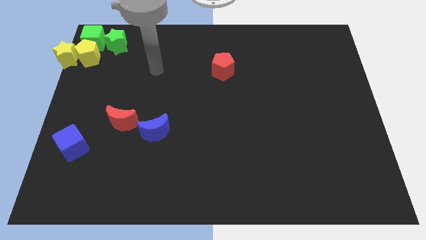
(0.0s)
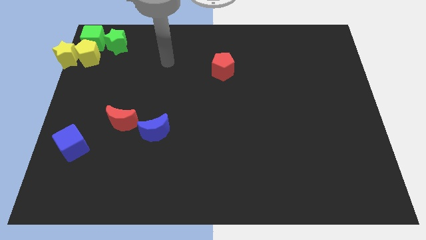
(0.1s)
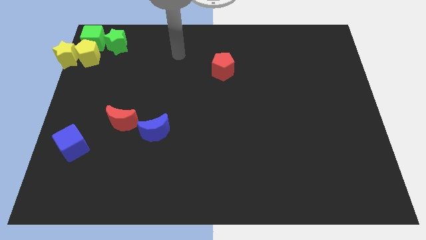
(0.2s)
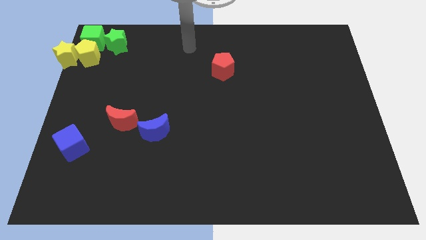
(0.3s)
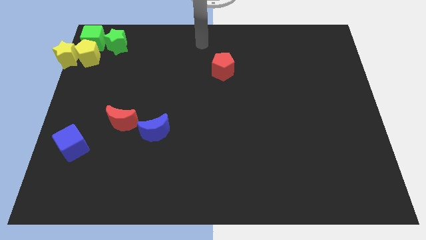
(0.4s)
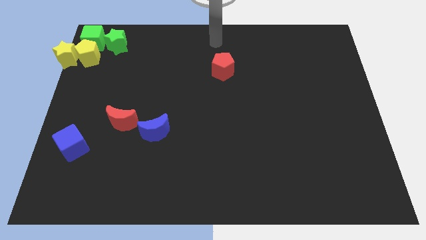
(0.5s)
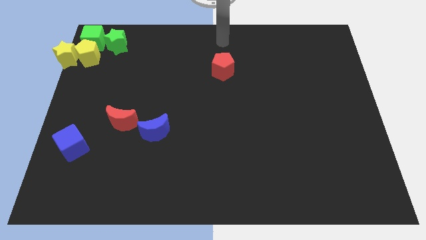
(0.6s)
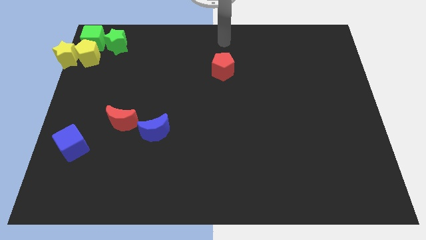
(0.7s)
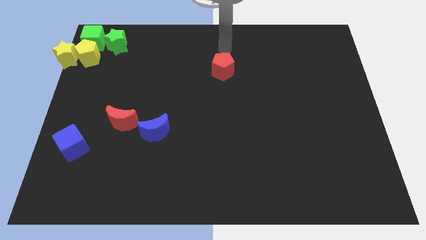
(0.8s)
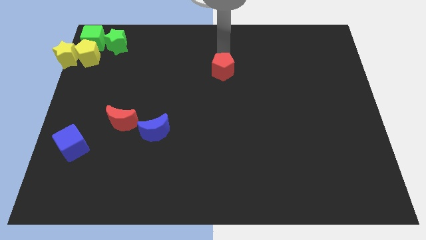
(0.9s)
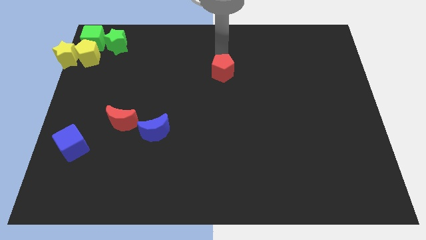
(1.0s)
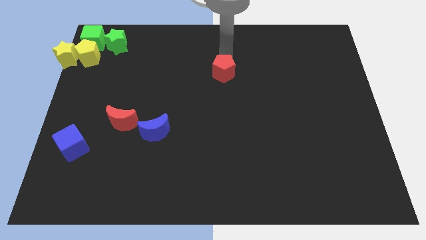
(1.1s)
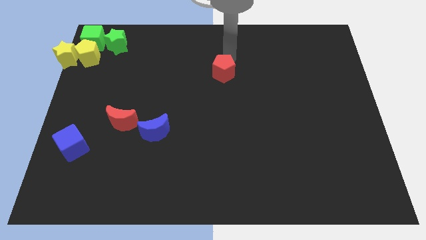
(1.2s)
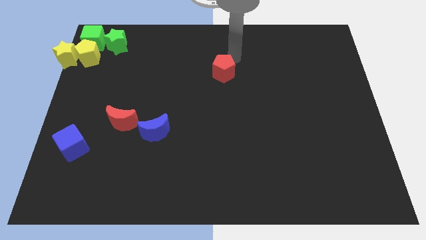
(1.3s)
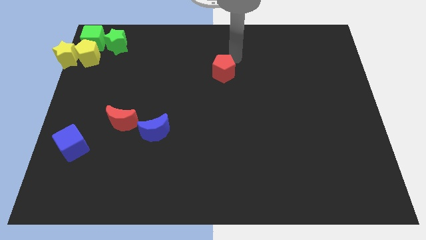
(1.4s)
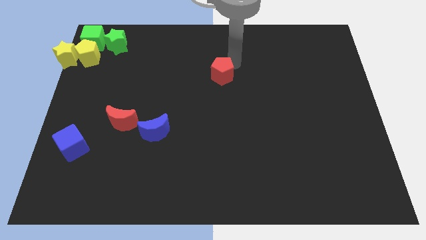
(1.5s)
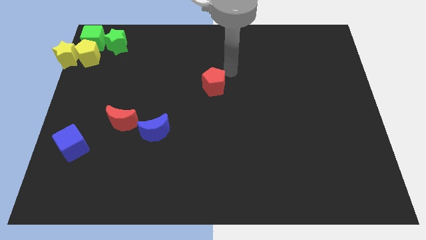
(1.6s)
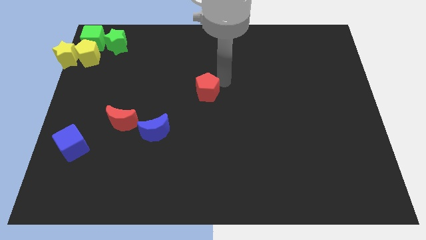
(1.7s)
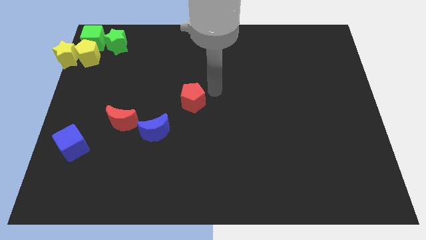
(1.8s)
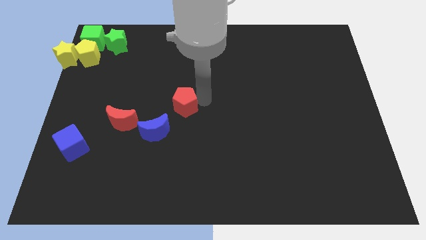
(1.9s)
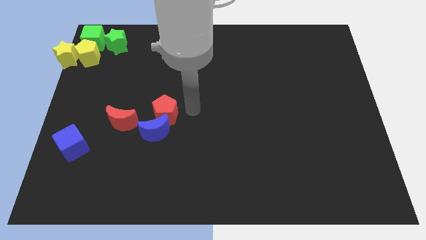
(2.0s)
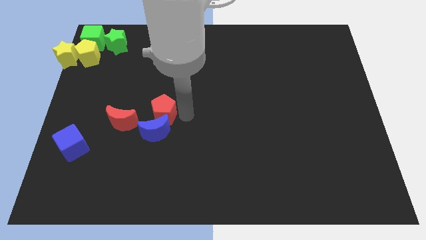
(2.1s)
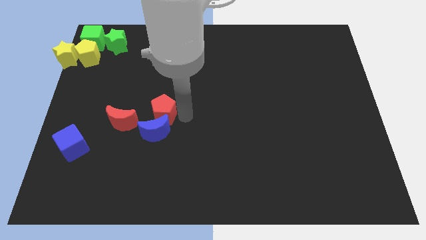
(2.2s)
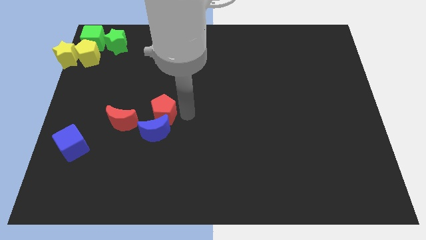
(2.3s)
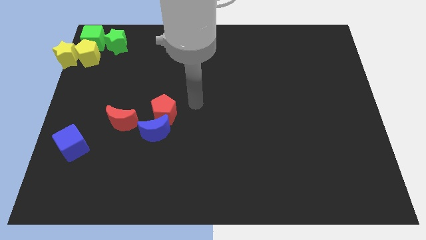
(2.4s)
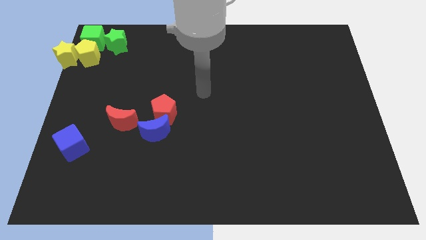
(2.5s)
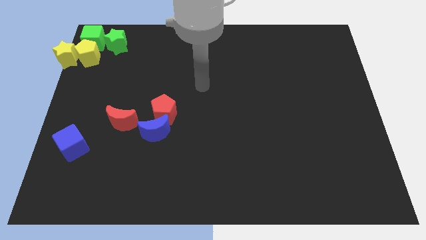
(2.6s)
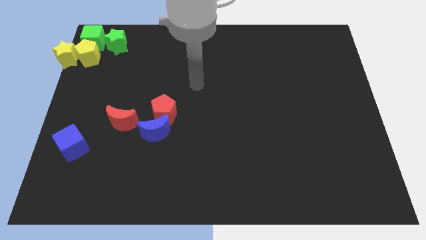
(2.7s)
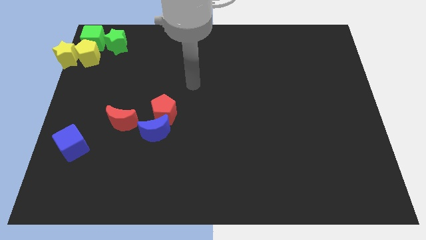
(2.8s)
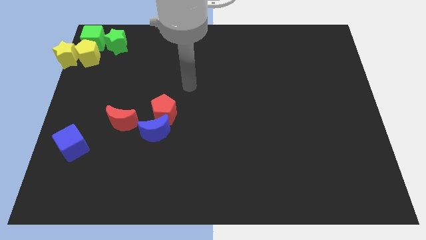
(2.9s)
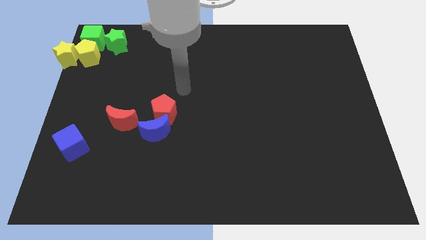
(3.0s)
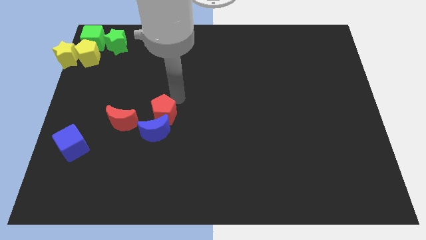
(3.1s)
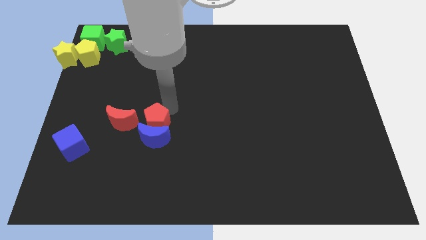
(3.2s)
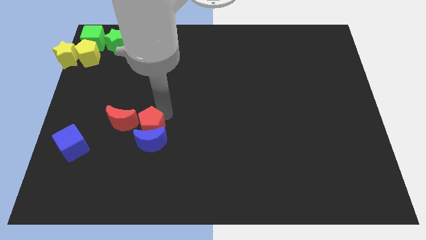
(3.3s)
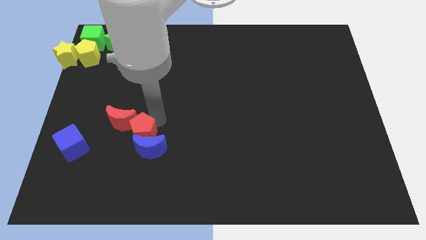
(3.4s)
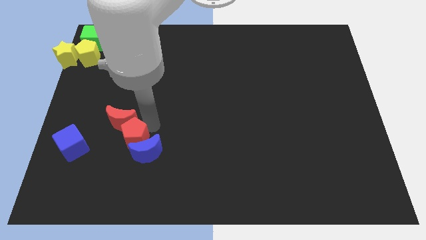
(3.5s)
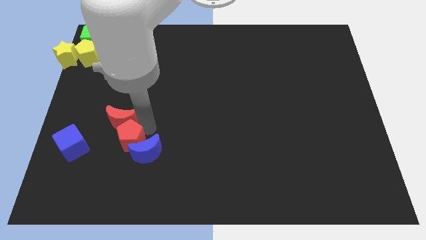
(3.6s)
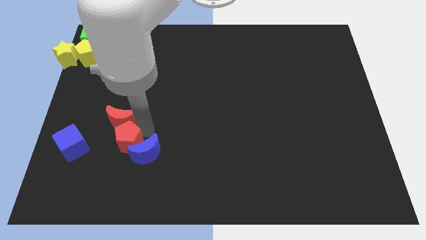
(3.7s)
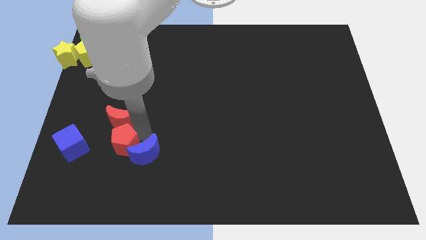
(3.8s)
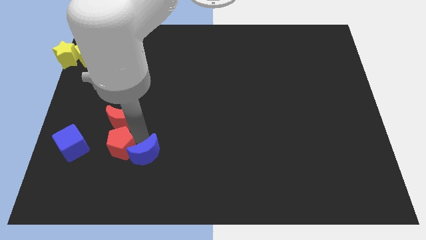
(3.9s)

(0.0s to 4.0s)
put the red pentagon below the red moon

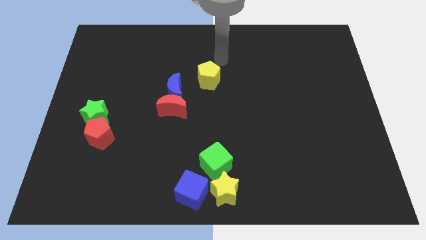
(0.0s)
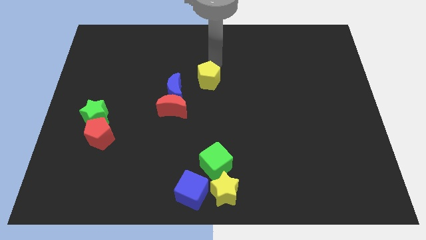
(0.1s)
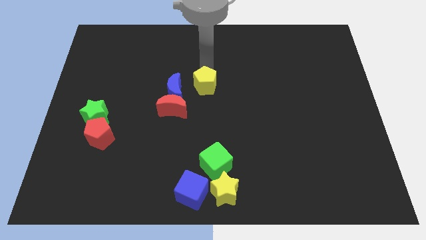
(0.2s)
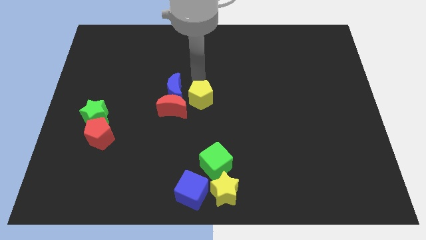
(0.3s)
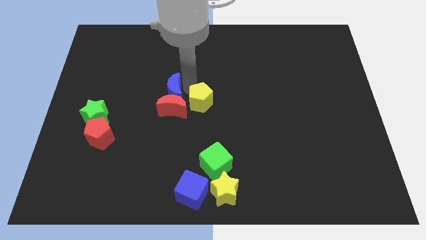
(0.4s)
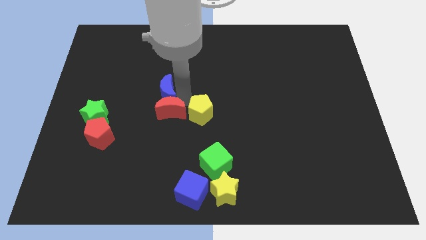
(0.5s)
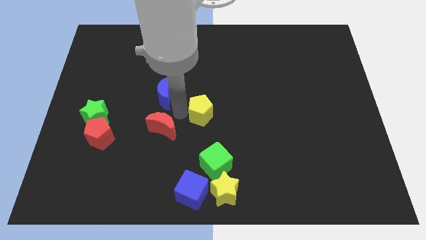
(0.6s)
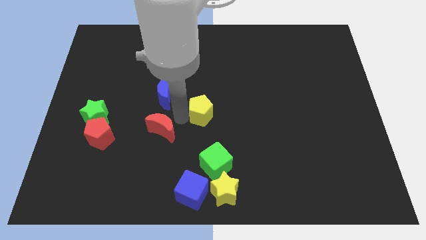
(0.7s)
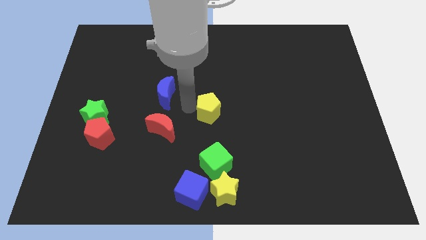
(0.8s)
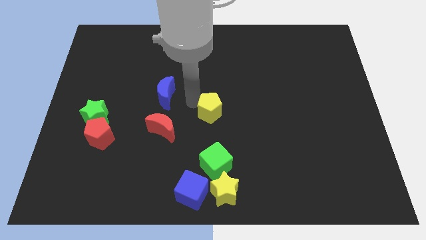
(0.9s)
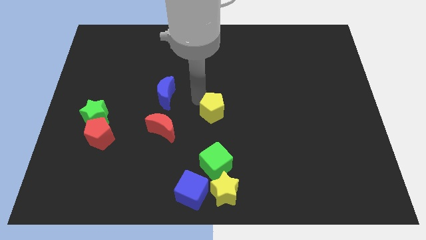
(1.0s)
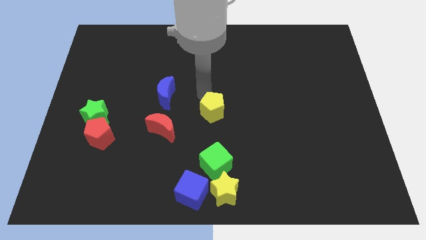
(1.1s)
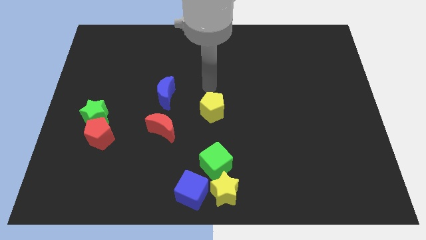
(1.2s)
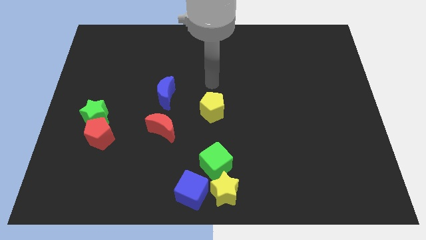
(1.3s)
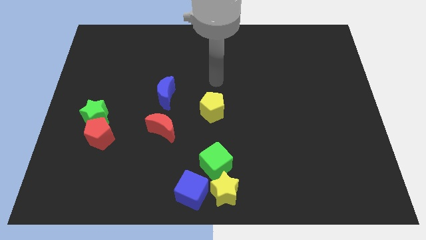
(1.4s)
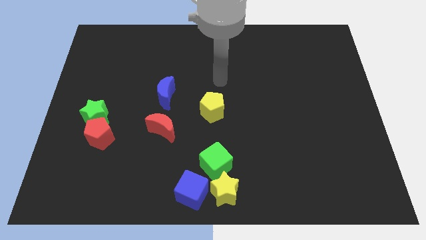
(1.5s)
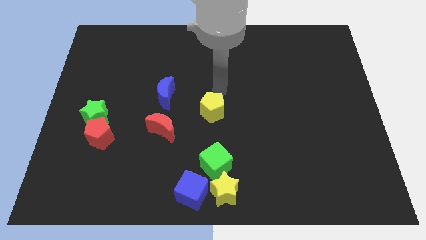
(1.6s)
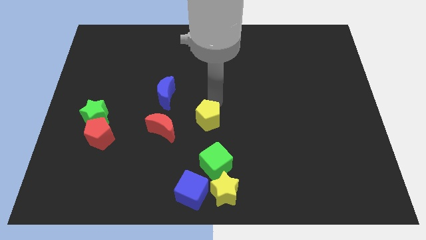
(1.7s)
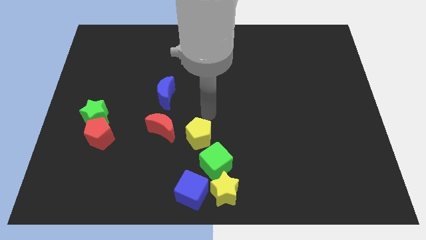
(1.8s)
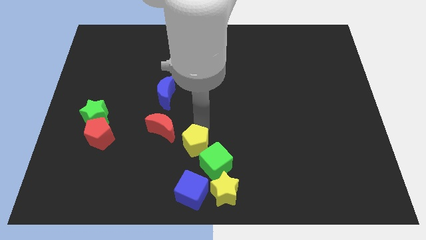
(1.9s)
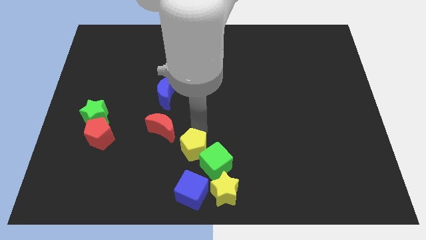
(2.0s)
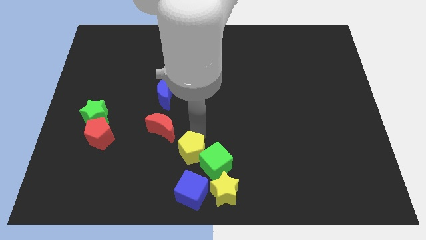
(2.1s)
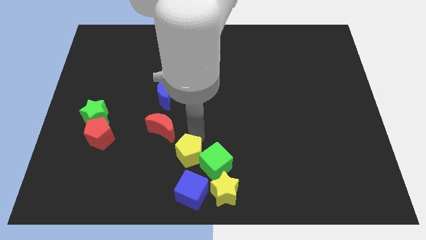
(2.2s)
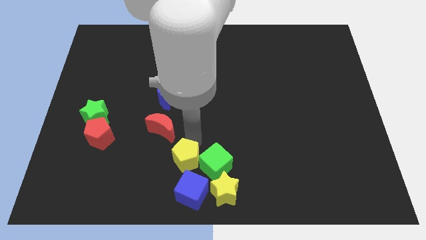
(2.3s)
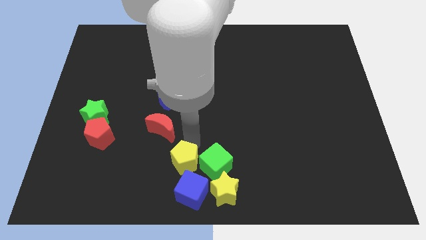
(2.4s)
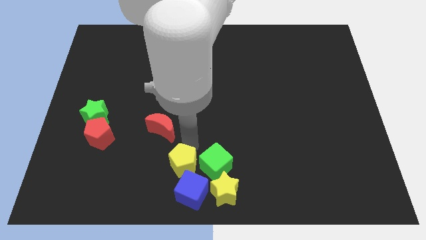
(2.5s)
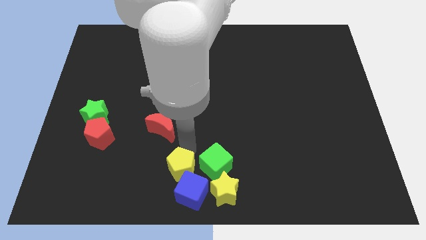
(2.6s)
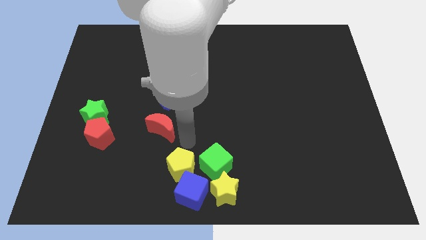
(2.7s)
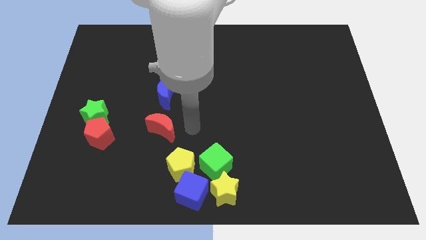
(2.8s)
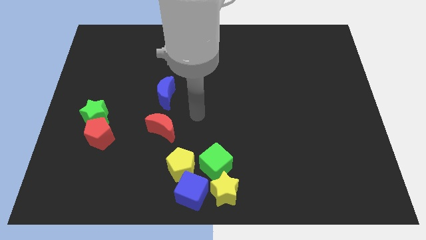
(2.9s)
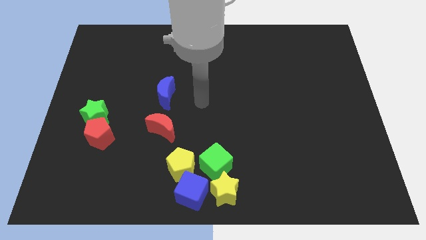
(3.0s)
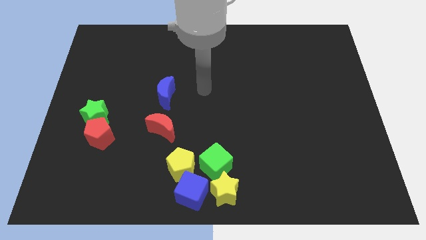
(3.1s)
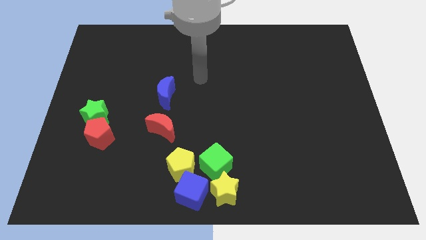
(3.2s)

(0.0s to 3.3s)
move the yellow pentagon to the top left side of the blue cube

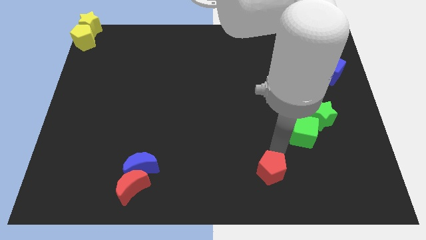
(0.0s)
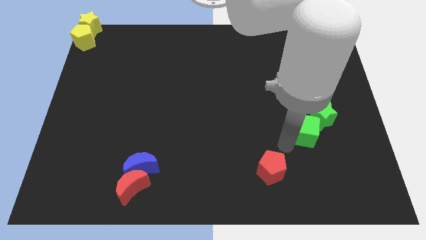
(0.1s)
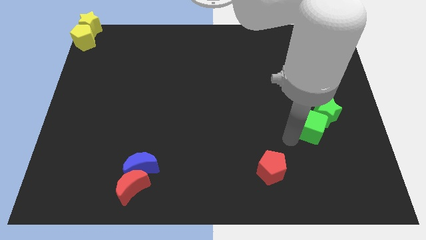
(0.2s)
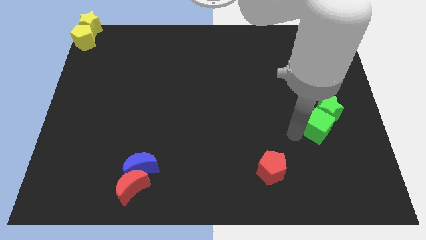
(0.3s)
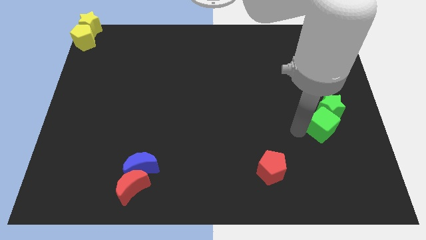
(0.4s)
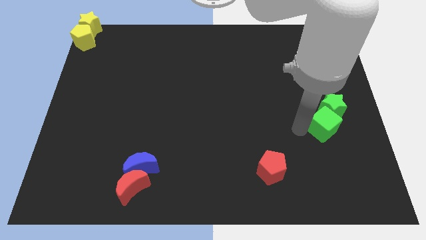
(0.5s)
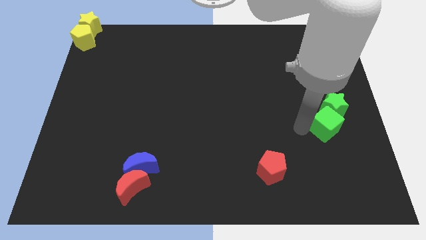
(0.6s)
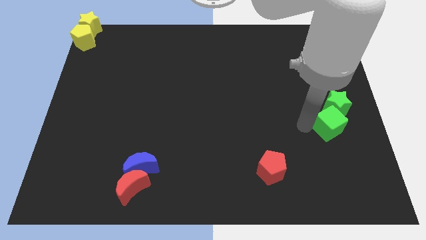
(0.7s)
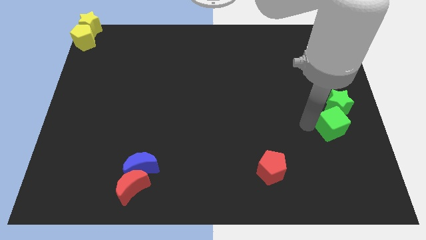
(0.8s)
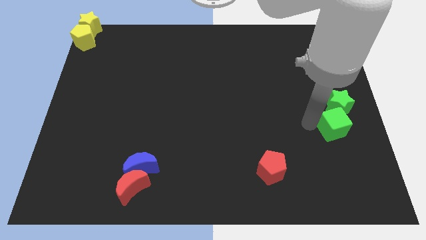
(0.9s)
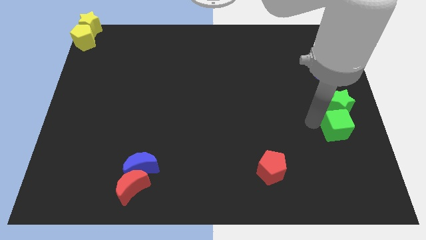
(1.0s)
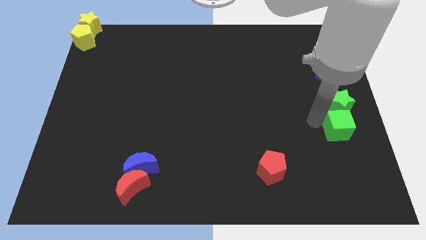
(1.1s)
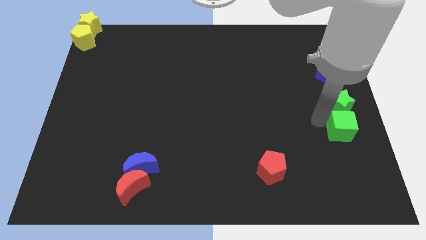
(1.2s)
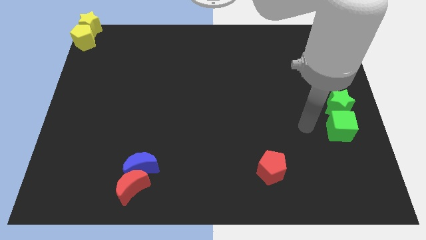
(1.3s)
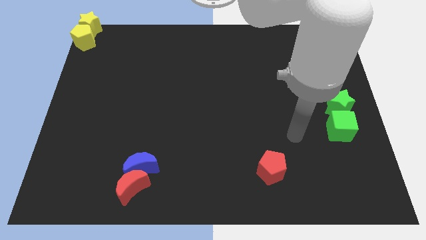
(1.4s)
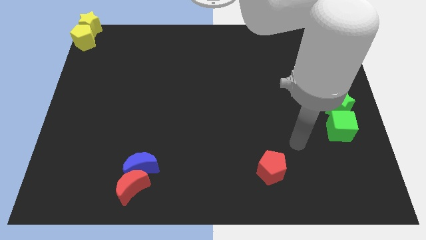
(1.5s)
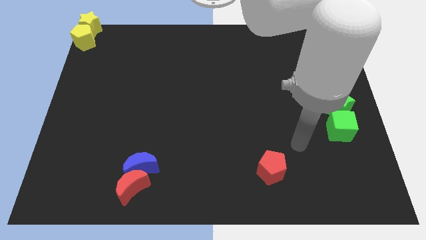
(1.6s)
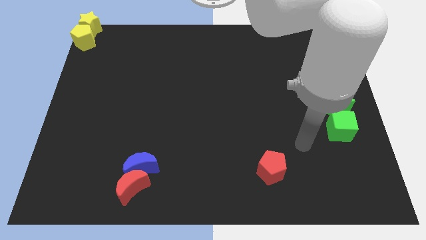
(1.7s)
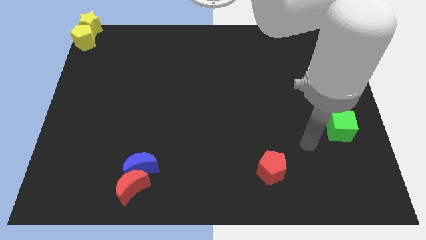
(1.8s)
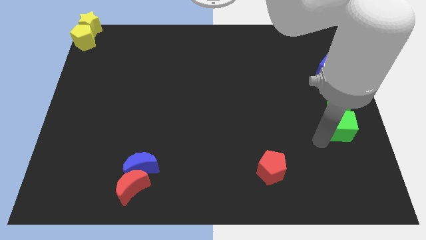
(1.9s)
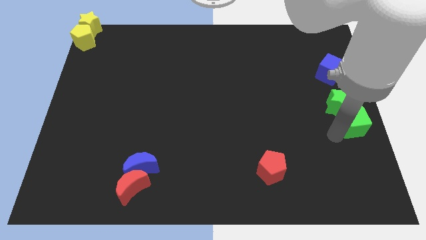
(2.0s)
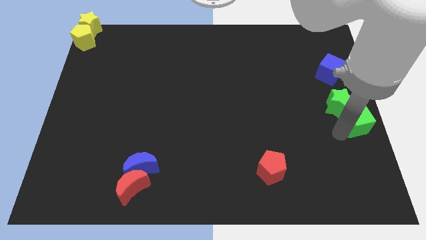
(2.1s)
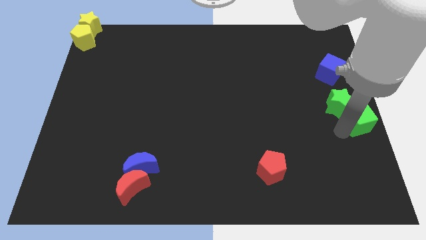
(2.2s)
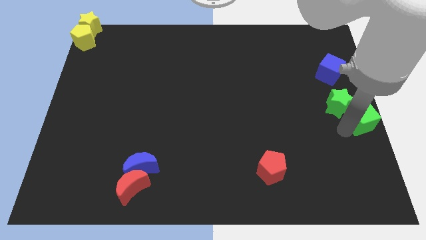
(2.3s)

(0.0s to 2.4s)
place green cube towards right middle end of the board
